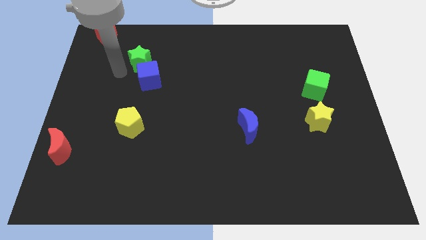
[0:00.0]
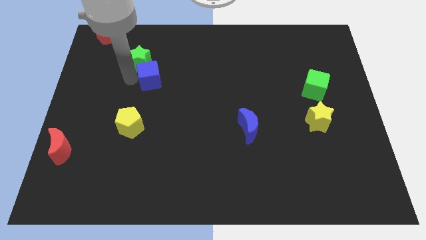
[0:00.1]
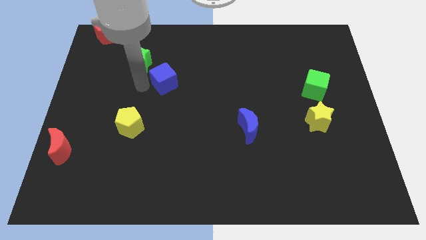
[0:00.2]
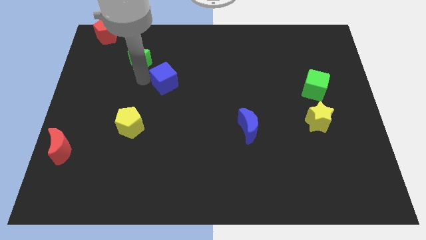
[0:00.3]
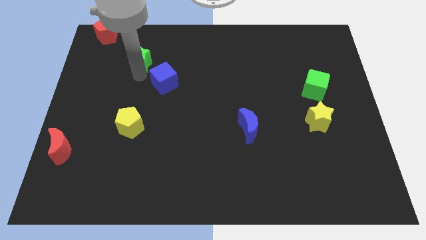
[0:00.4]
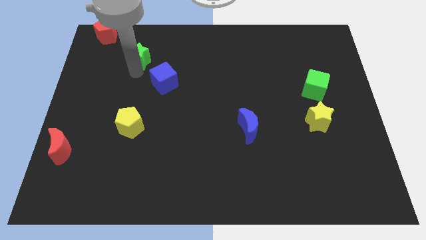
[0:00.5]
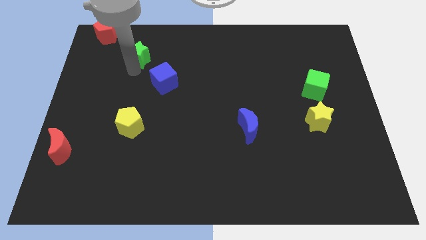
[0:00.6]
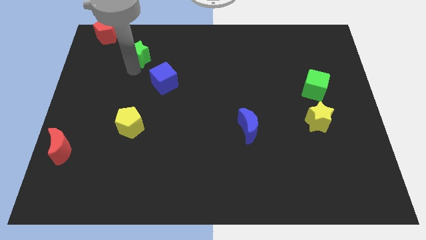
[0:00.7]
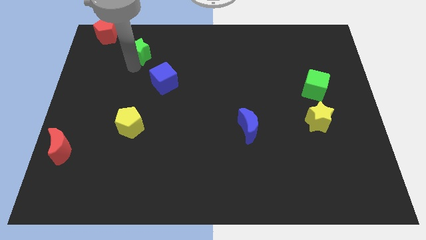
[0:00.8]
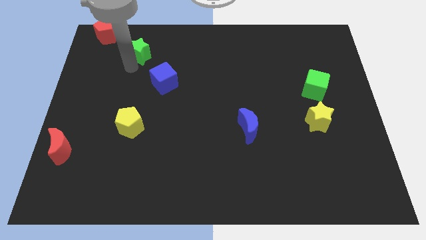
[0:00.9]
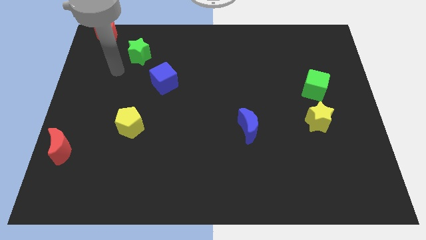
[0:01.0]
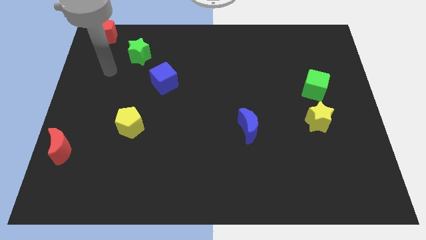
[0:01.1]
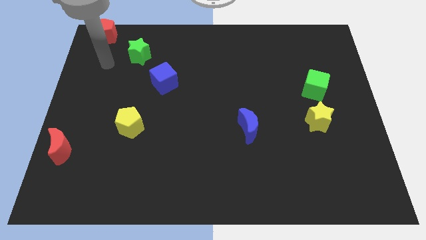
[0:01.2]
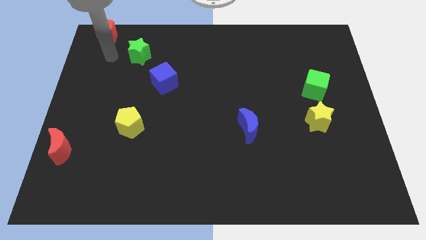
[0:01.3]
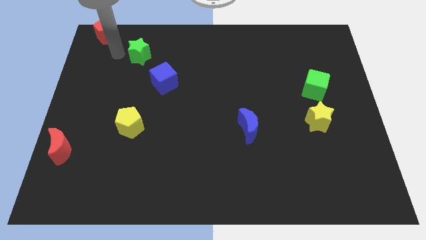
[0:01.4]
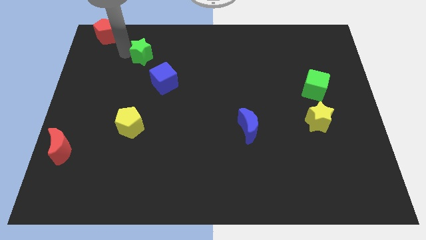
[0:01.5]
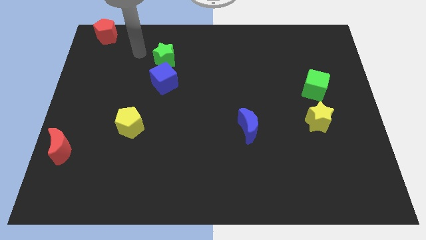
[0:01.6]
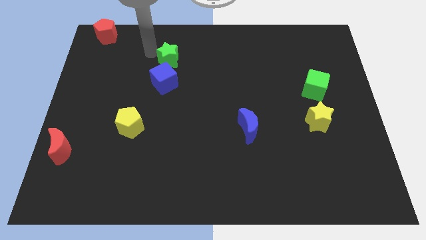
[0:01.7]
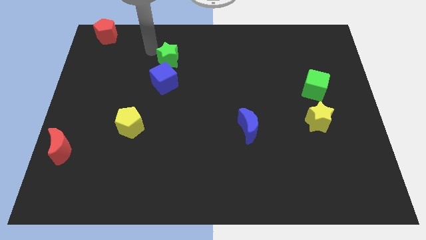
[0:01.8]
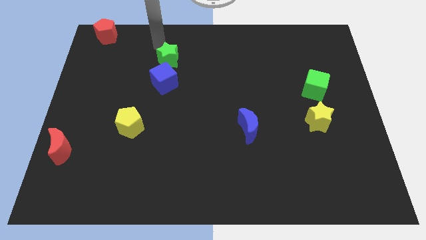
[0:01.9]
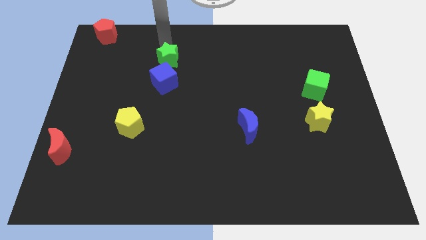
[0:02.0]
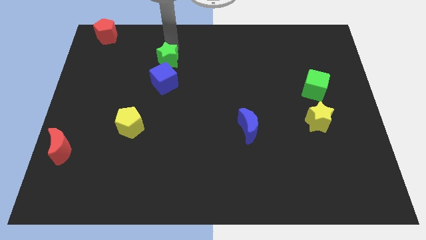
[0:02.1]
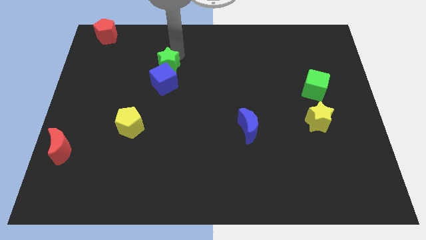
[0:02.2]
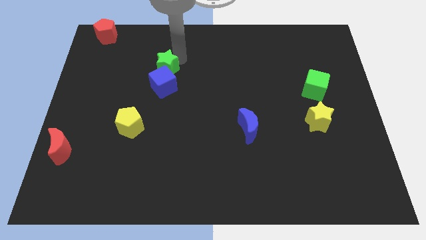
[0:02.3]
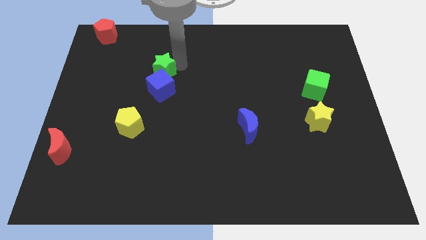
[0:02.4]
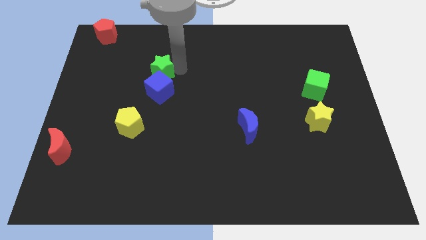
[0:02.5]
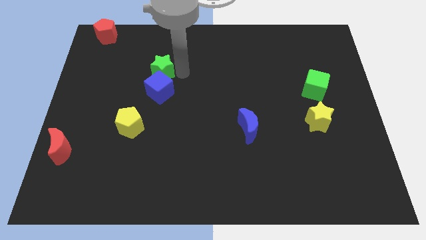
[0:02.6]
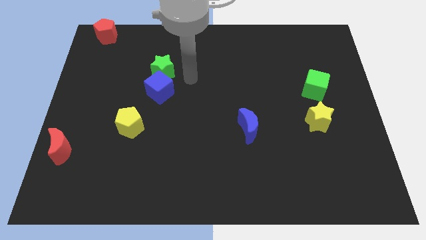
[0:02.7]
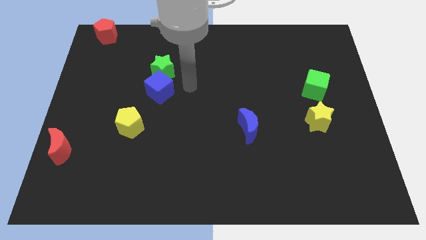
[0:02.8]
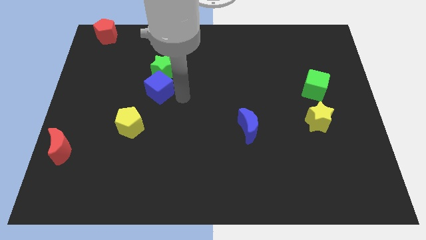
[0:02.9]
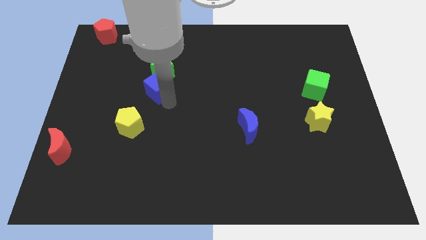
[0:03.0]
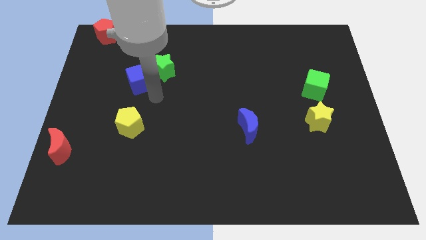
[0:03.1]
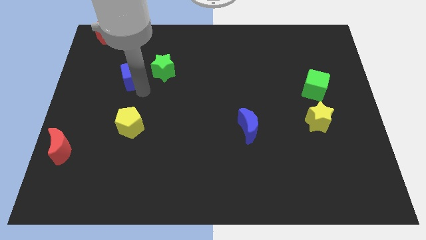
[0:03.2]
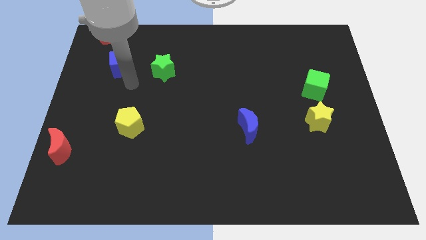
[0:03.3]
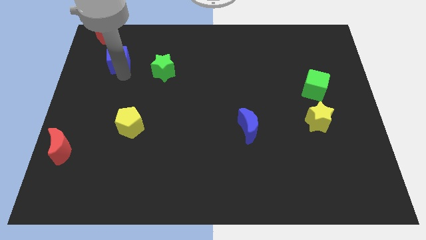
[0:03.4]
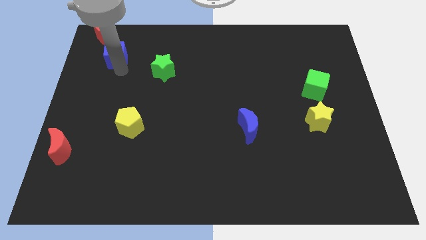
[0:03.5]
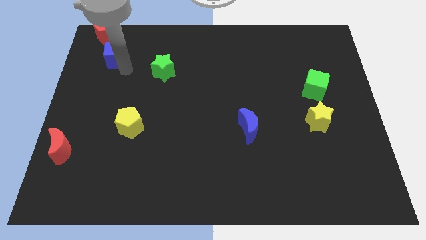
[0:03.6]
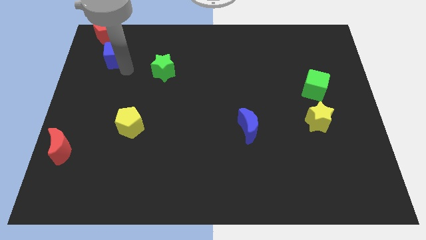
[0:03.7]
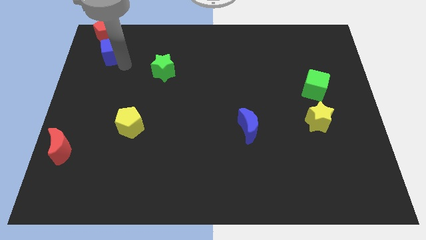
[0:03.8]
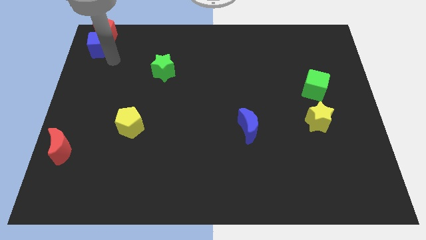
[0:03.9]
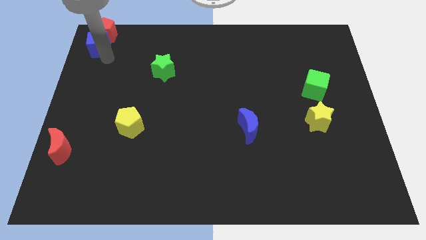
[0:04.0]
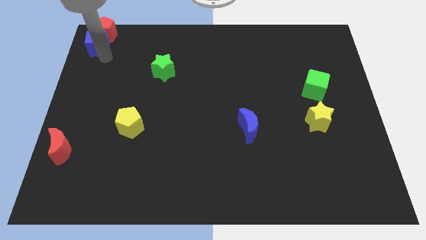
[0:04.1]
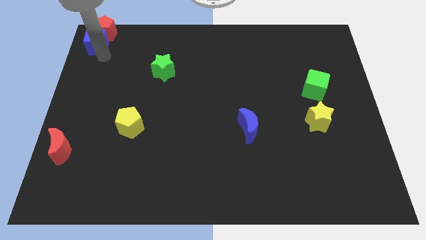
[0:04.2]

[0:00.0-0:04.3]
move the blue cube into the bottom side of the red pentagon

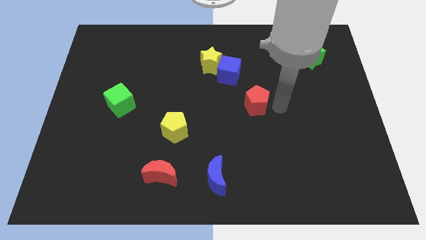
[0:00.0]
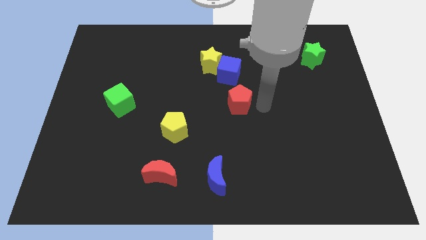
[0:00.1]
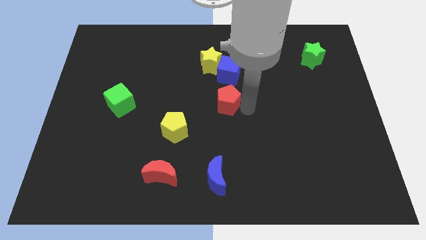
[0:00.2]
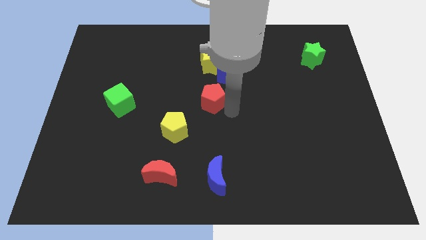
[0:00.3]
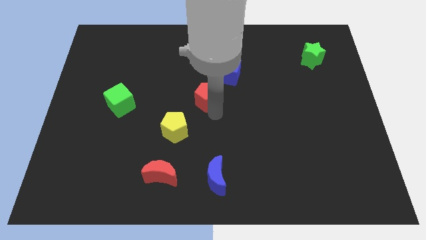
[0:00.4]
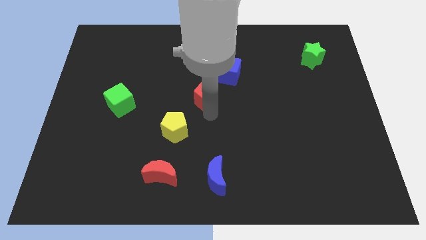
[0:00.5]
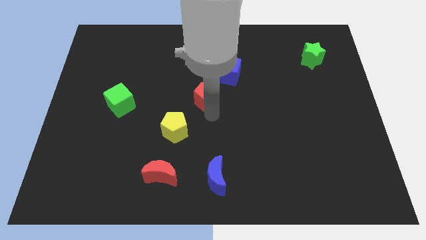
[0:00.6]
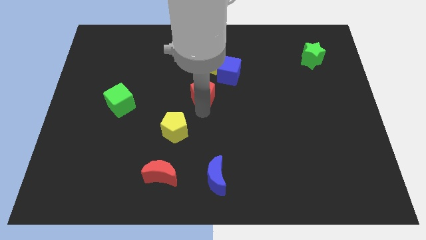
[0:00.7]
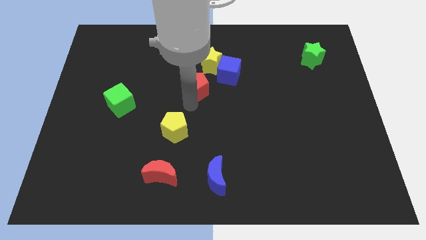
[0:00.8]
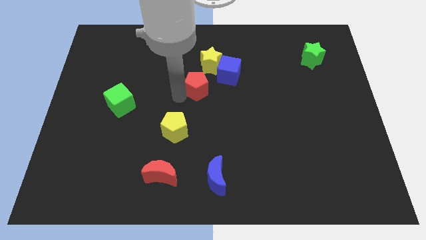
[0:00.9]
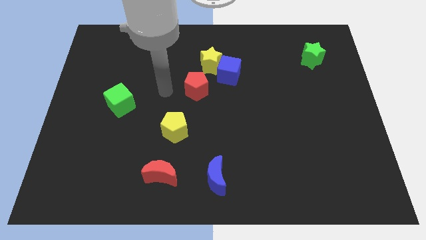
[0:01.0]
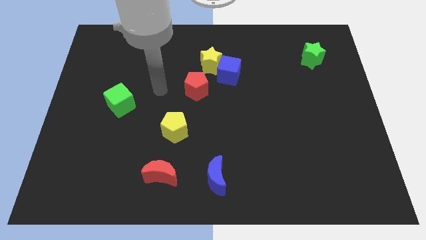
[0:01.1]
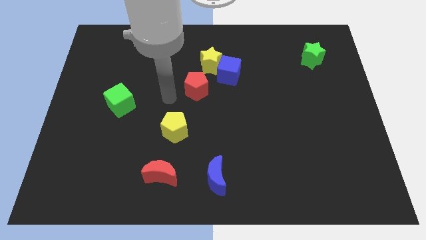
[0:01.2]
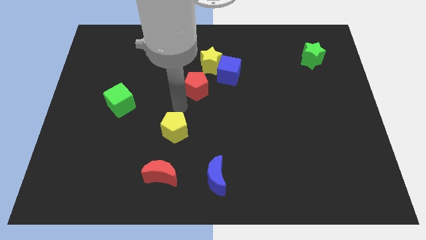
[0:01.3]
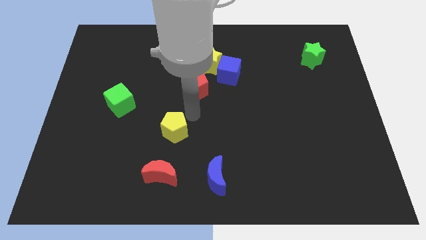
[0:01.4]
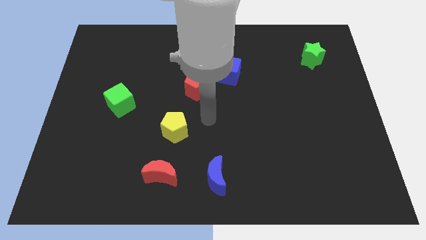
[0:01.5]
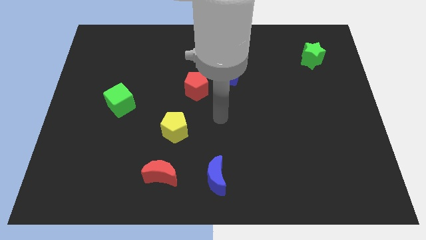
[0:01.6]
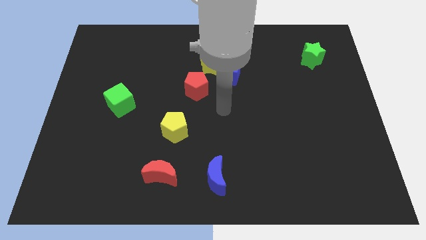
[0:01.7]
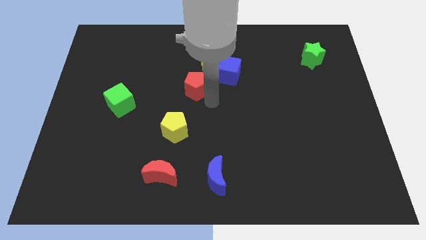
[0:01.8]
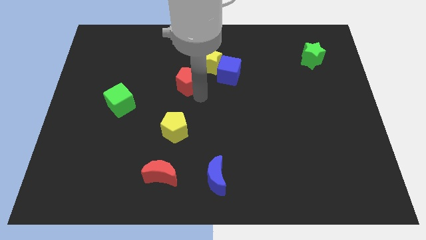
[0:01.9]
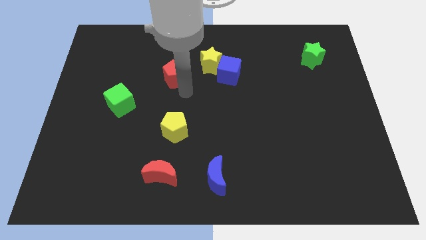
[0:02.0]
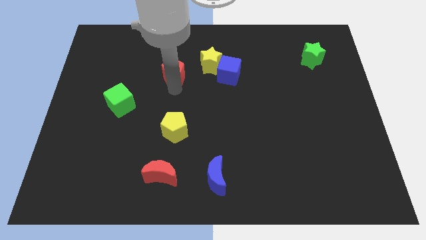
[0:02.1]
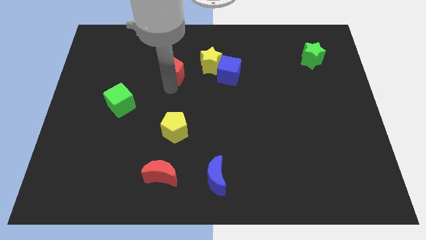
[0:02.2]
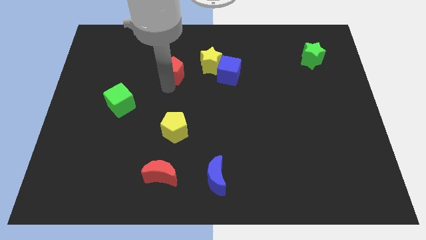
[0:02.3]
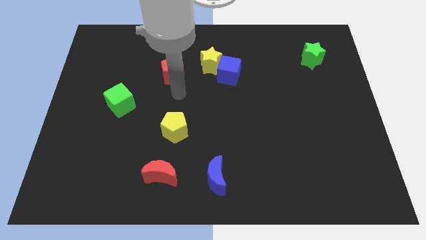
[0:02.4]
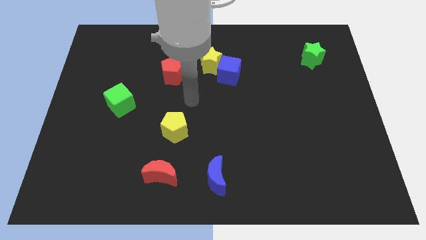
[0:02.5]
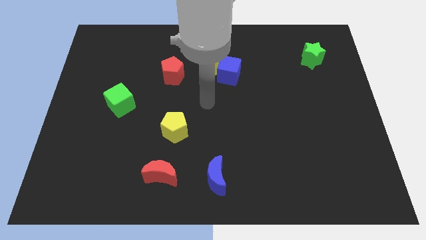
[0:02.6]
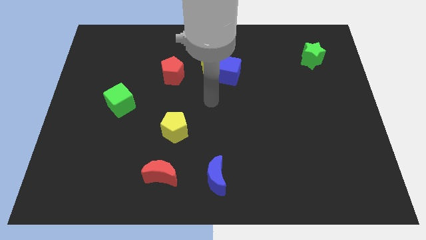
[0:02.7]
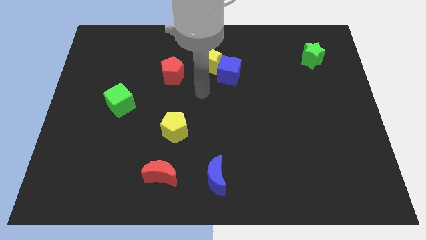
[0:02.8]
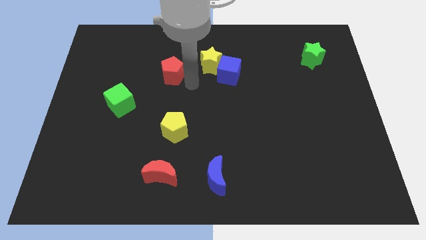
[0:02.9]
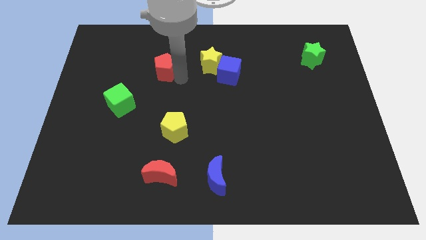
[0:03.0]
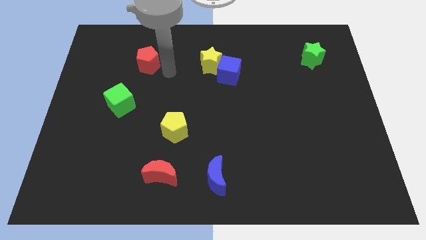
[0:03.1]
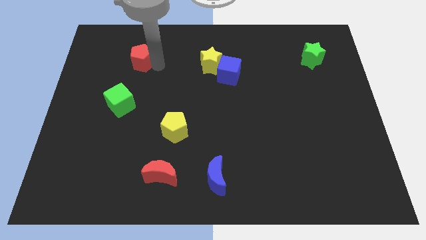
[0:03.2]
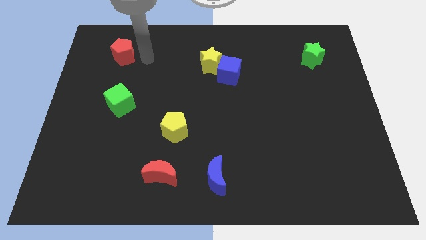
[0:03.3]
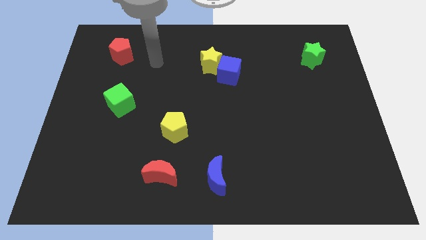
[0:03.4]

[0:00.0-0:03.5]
place the red pentagon above the green cube

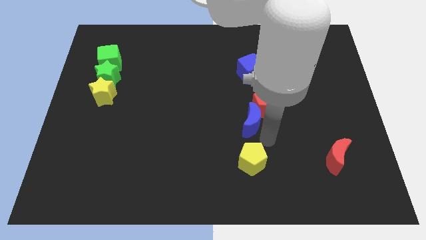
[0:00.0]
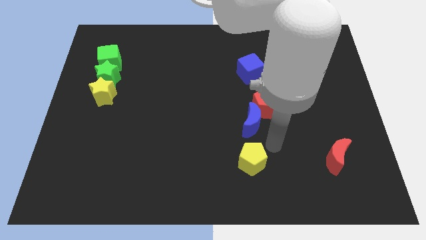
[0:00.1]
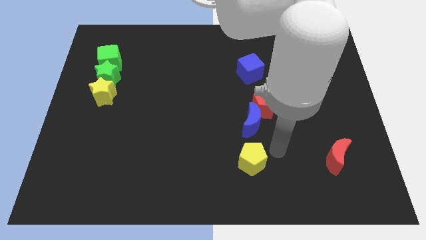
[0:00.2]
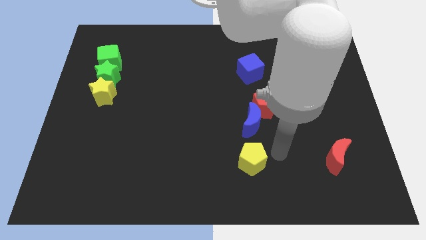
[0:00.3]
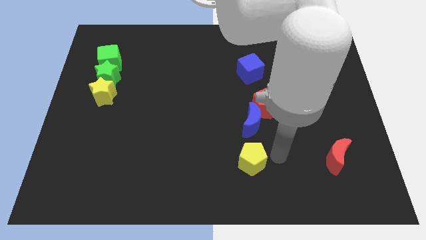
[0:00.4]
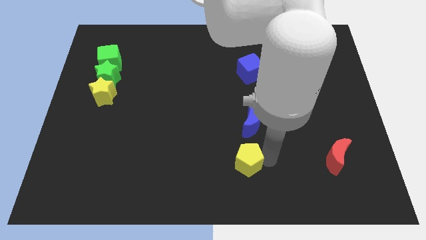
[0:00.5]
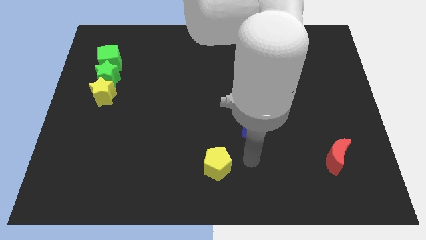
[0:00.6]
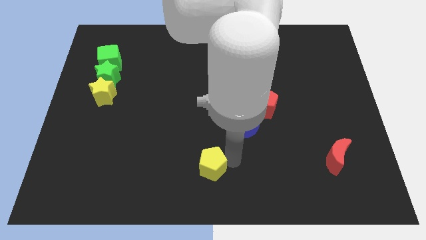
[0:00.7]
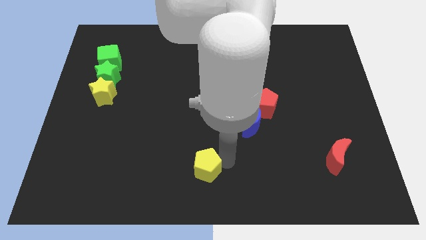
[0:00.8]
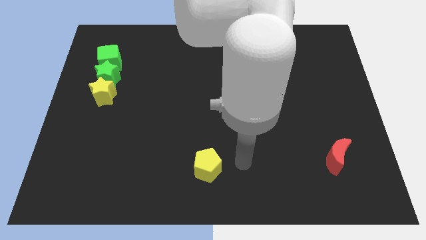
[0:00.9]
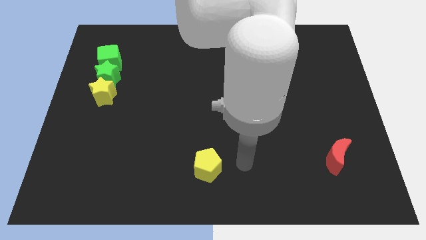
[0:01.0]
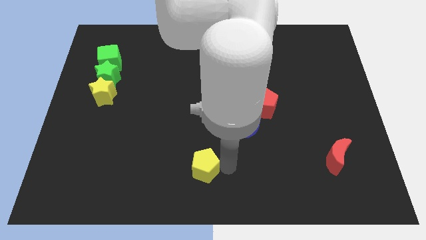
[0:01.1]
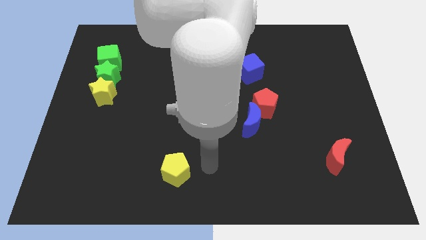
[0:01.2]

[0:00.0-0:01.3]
move the yellow pentagon to the left of the board
